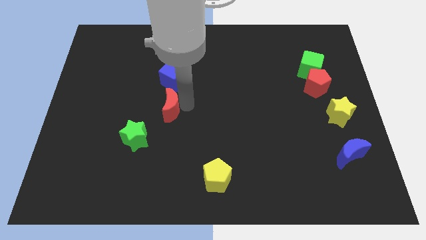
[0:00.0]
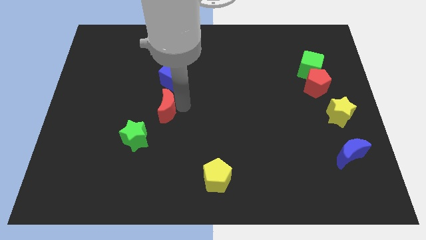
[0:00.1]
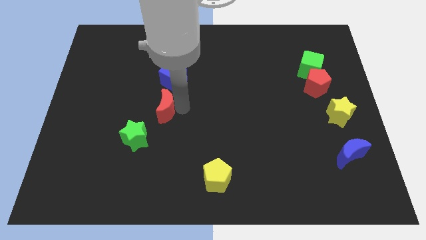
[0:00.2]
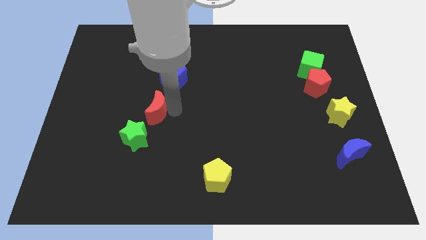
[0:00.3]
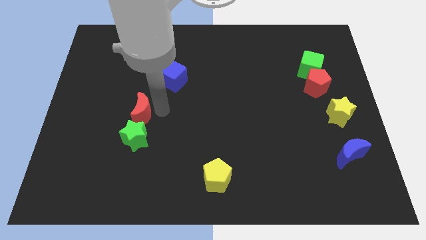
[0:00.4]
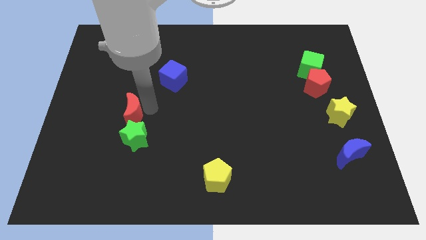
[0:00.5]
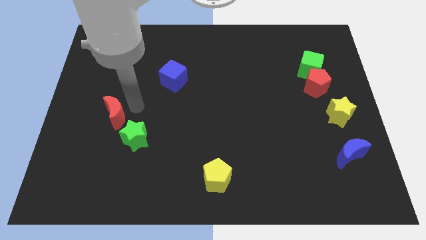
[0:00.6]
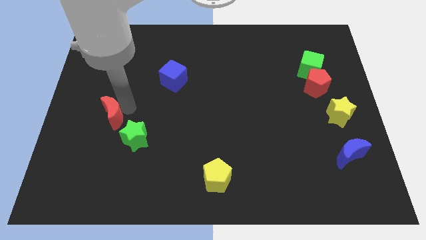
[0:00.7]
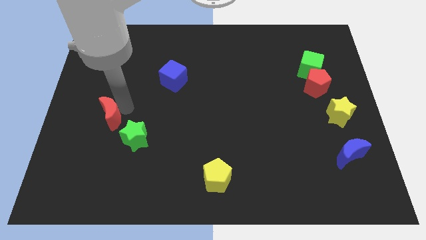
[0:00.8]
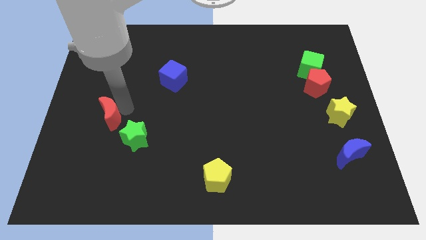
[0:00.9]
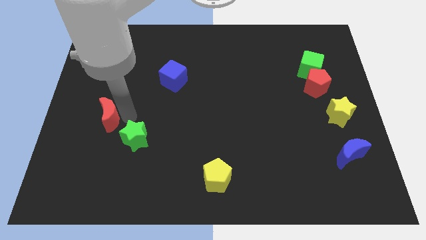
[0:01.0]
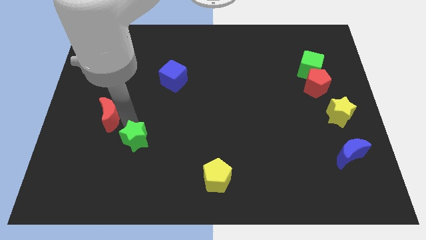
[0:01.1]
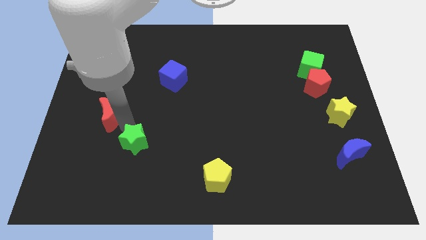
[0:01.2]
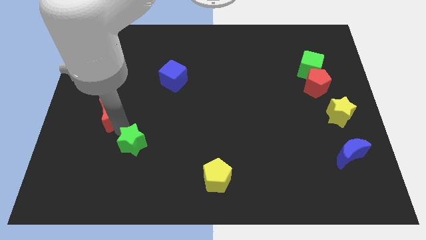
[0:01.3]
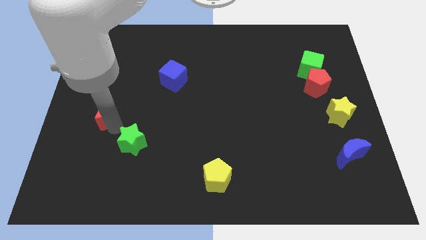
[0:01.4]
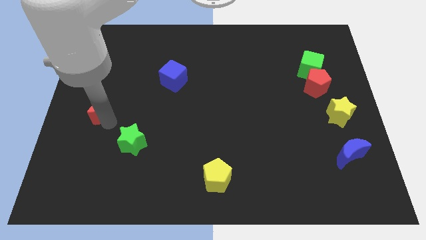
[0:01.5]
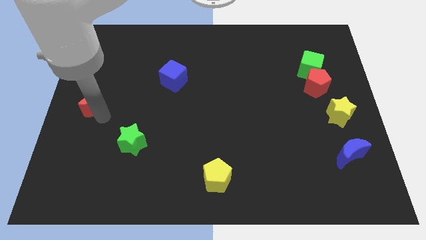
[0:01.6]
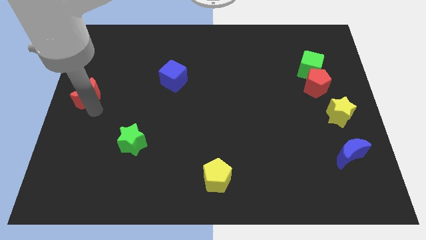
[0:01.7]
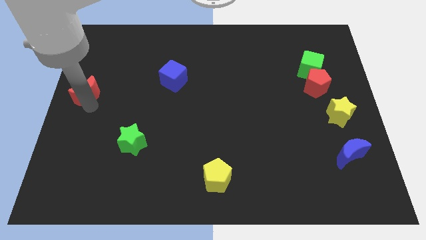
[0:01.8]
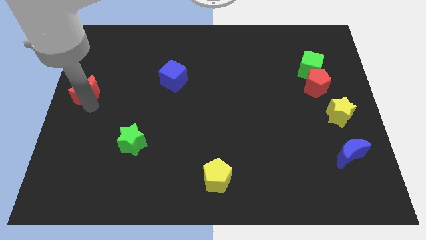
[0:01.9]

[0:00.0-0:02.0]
drag the red crescent towards the left

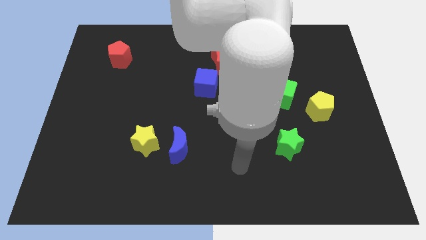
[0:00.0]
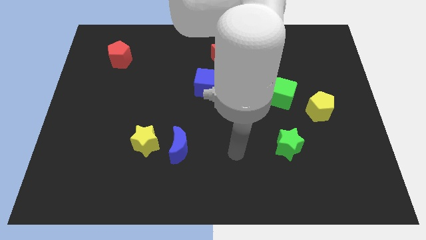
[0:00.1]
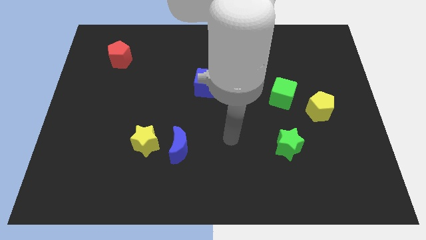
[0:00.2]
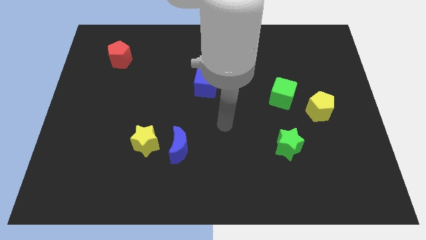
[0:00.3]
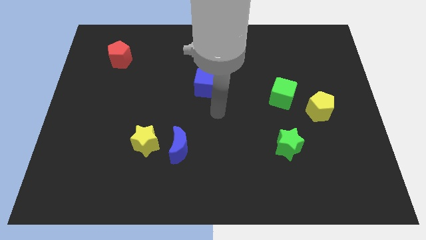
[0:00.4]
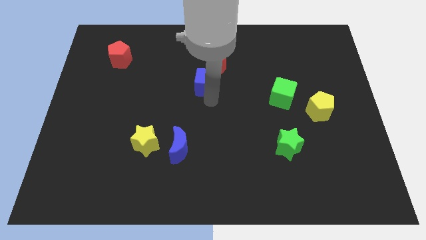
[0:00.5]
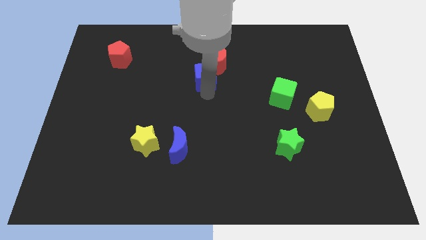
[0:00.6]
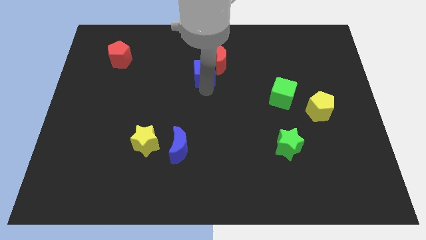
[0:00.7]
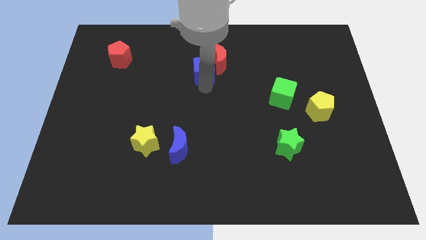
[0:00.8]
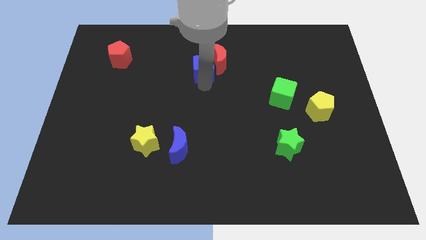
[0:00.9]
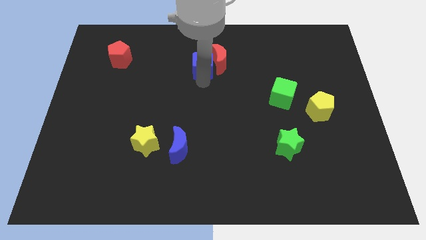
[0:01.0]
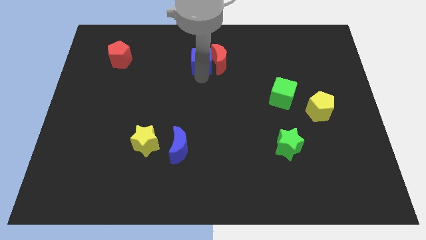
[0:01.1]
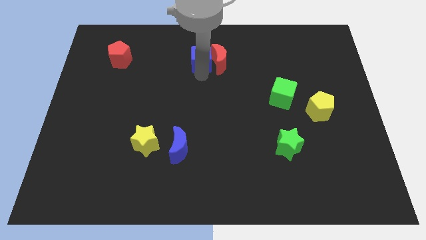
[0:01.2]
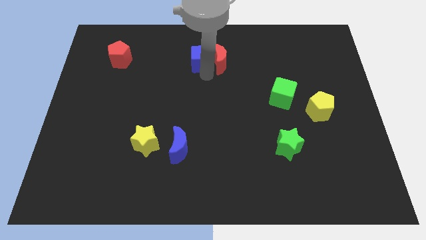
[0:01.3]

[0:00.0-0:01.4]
move the blue cube into the left side of the red crescent

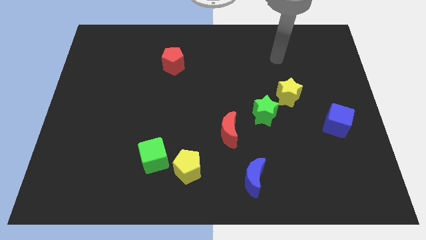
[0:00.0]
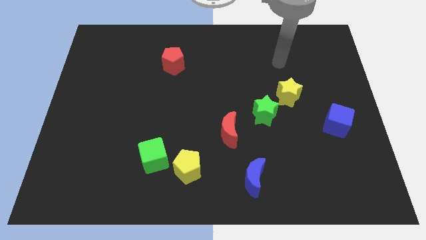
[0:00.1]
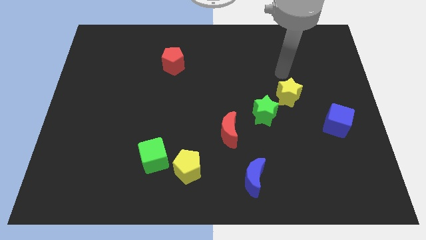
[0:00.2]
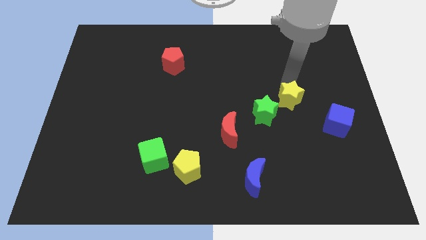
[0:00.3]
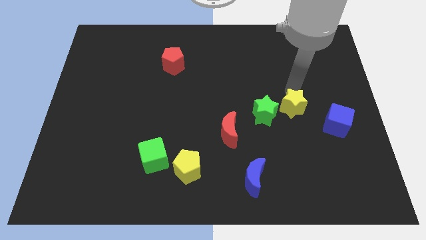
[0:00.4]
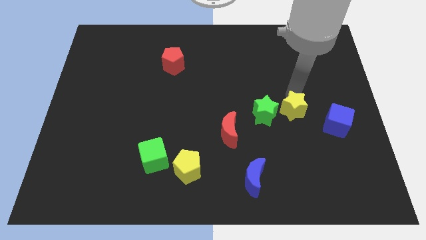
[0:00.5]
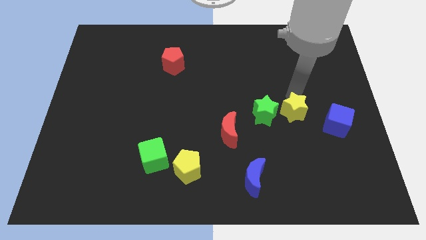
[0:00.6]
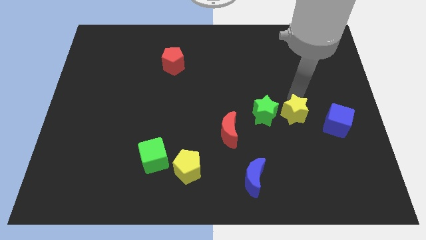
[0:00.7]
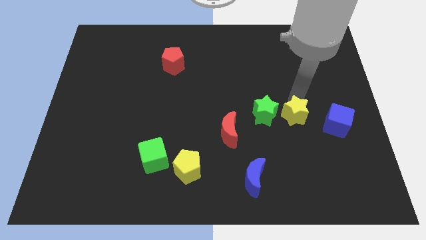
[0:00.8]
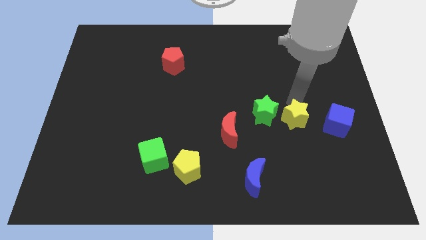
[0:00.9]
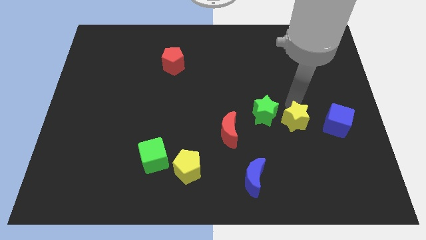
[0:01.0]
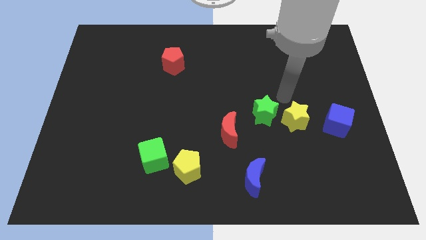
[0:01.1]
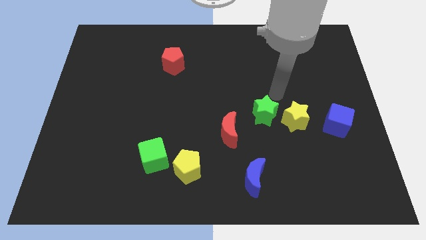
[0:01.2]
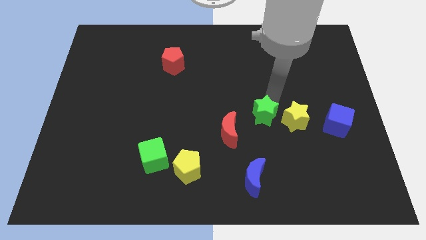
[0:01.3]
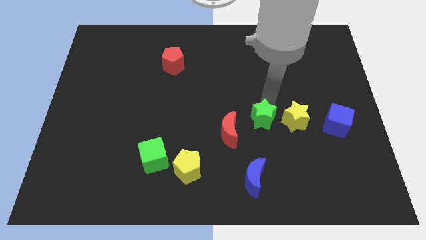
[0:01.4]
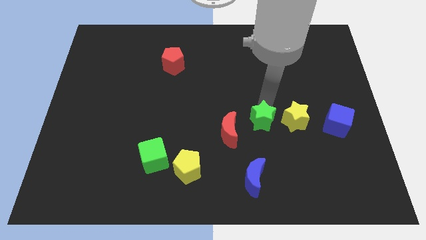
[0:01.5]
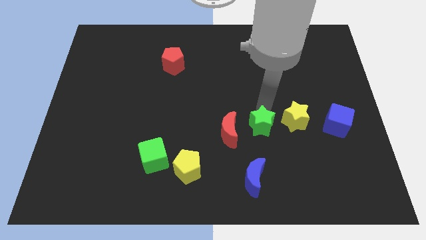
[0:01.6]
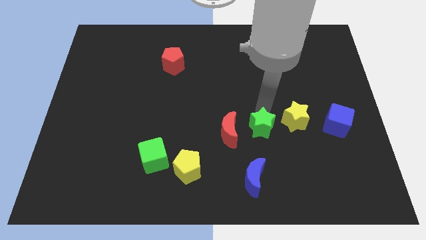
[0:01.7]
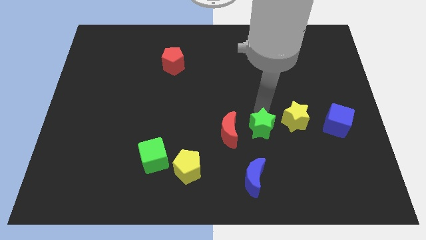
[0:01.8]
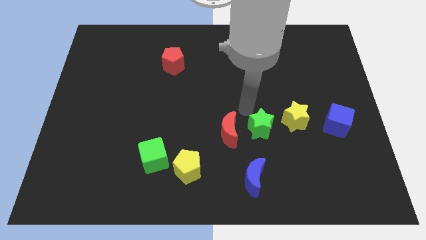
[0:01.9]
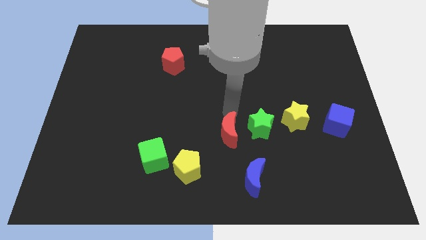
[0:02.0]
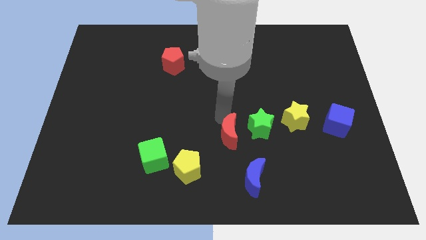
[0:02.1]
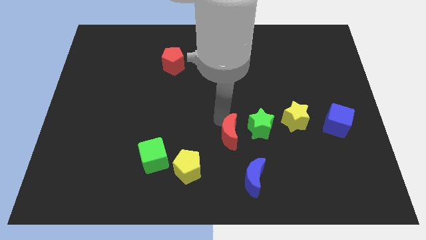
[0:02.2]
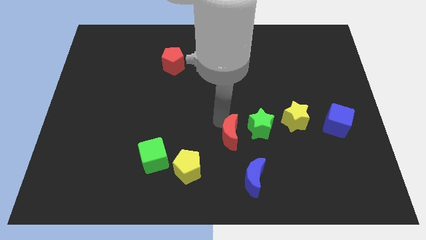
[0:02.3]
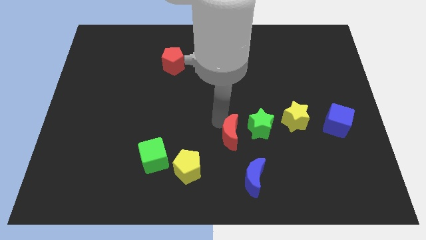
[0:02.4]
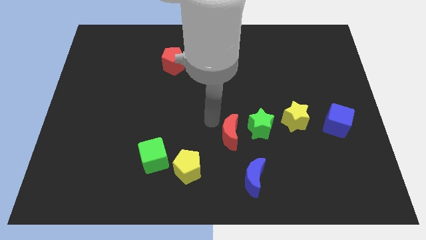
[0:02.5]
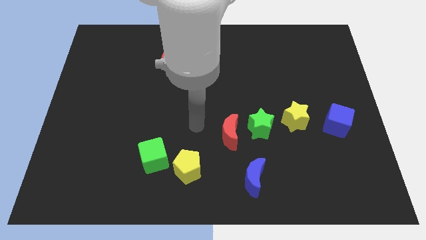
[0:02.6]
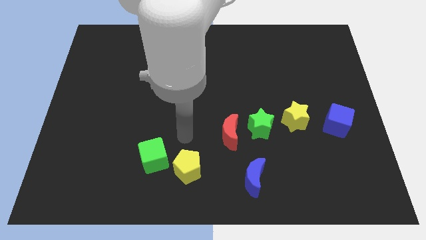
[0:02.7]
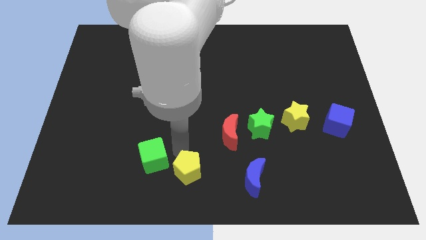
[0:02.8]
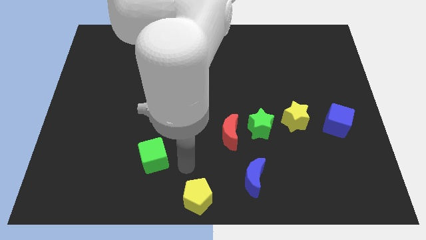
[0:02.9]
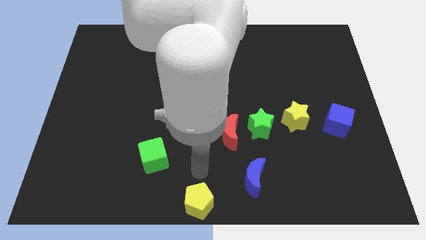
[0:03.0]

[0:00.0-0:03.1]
arrange green star yellow star and red crescent in a diagonal line

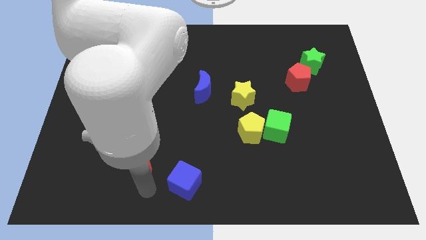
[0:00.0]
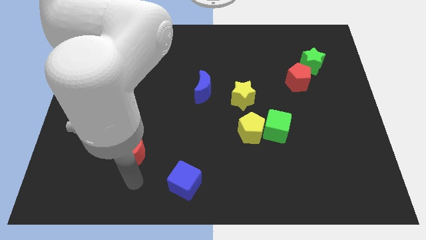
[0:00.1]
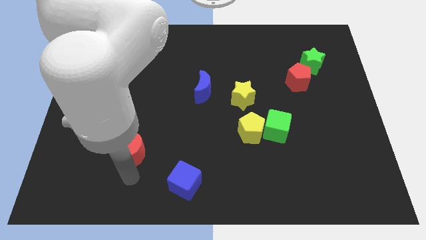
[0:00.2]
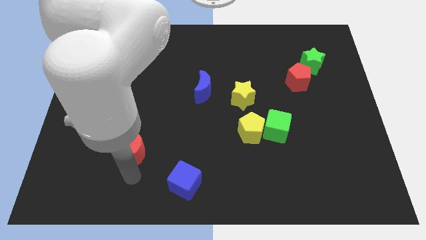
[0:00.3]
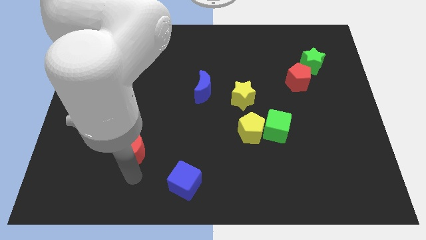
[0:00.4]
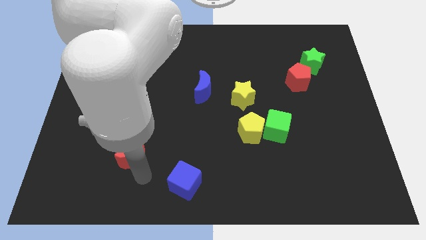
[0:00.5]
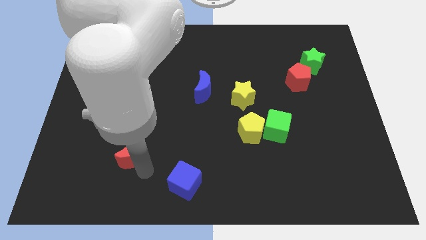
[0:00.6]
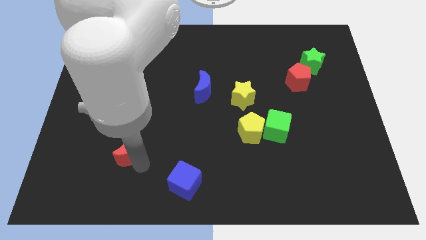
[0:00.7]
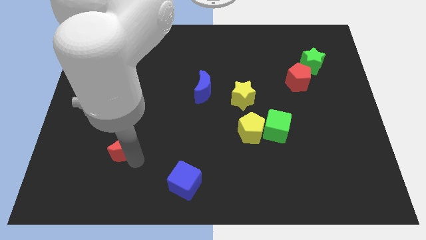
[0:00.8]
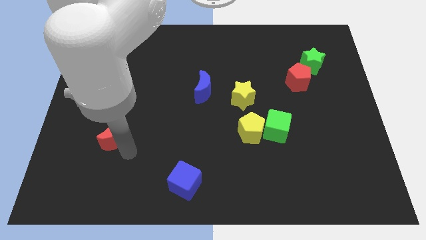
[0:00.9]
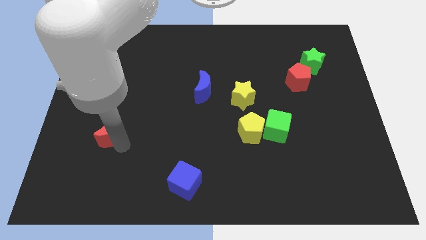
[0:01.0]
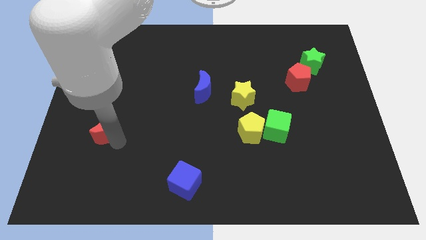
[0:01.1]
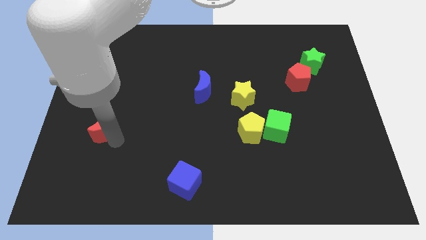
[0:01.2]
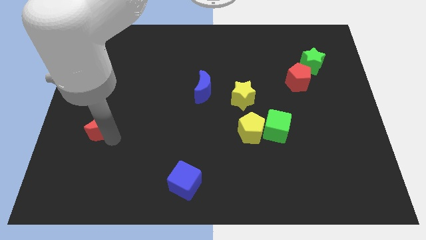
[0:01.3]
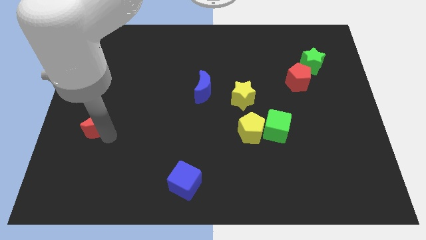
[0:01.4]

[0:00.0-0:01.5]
place the red crescent to the left of the yellow pentagon

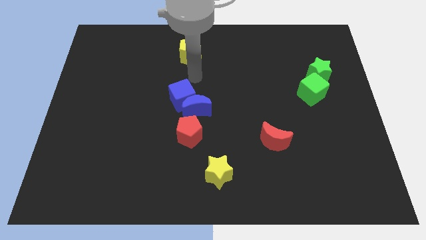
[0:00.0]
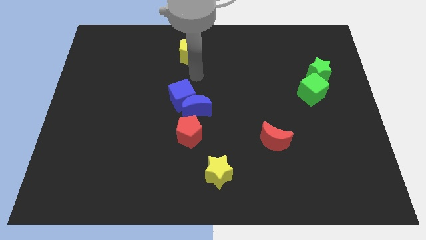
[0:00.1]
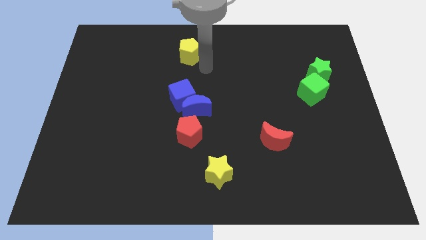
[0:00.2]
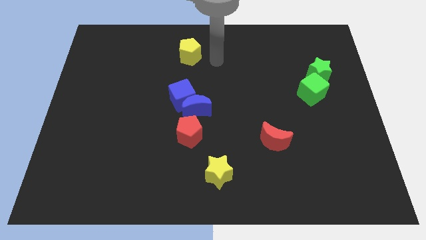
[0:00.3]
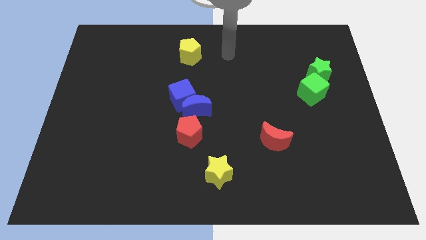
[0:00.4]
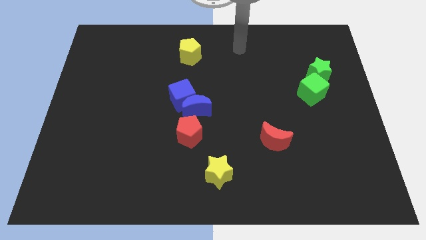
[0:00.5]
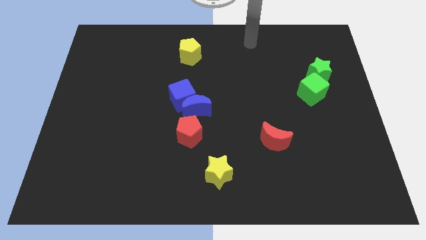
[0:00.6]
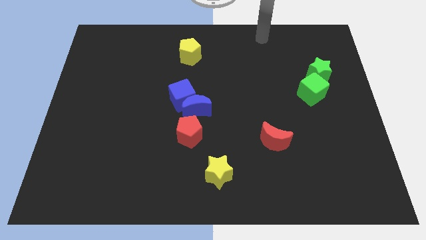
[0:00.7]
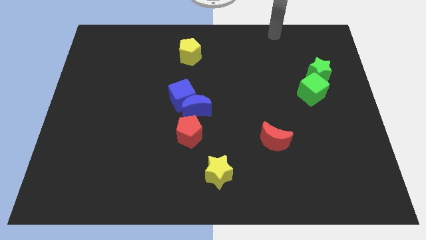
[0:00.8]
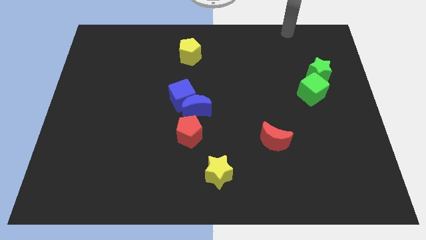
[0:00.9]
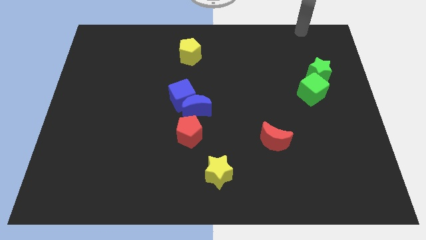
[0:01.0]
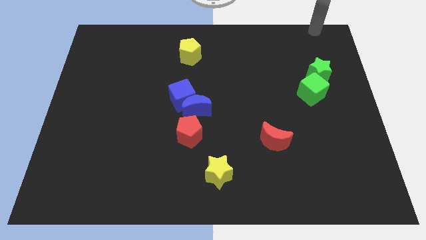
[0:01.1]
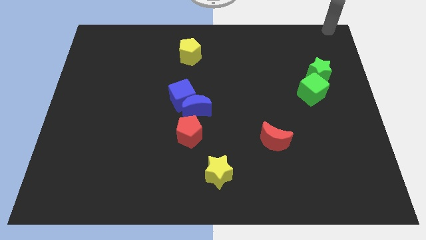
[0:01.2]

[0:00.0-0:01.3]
point your arm at the top side of the green star
